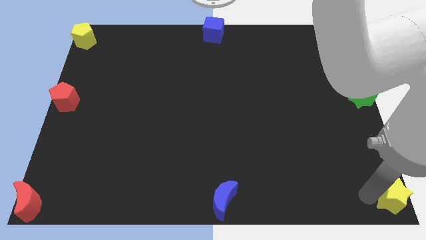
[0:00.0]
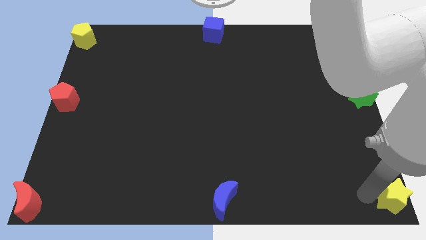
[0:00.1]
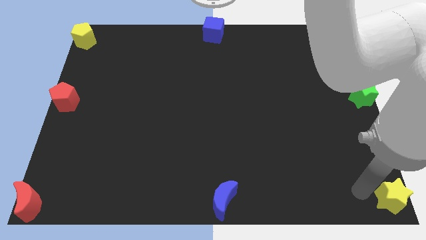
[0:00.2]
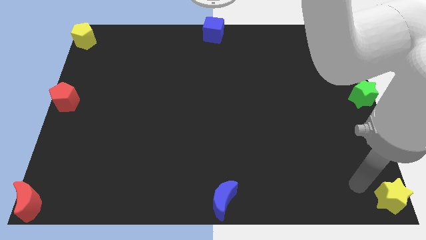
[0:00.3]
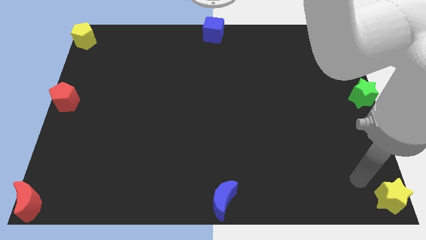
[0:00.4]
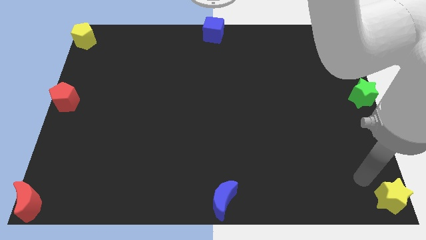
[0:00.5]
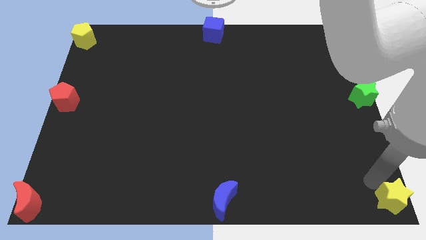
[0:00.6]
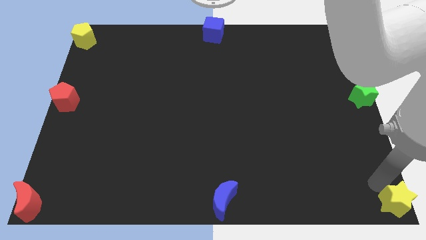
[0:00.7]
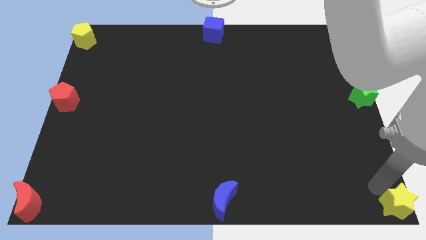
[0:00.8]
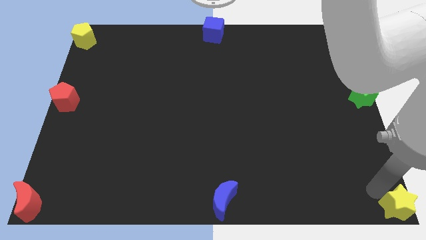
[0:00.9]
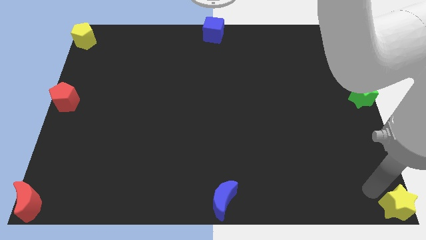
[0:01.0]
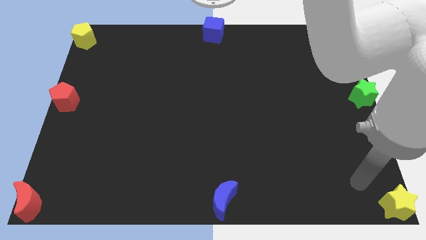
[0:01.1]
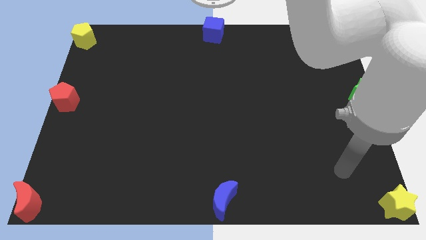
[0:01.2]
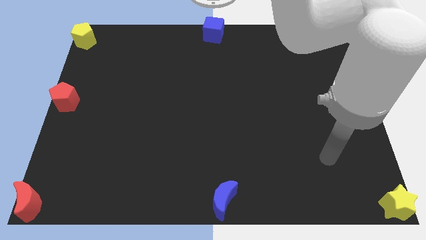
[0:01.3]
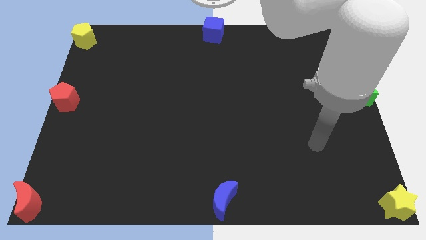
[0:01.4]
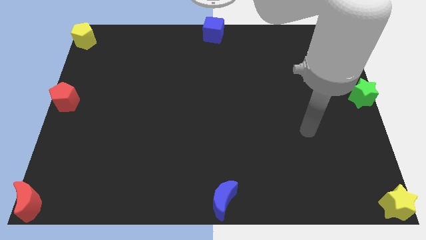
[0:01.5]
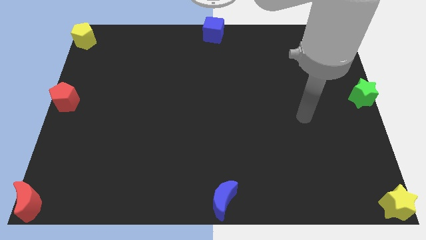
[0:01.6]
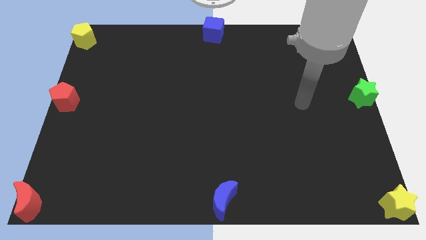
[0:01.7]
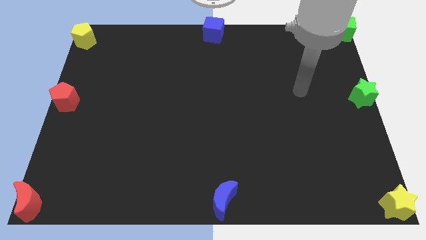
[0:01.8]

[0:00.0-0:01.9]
place yellow star to the eight bottom end

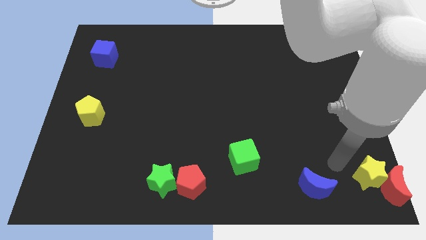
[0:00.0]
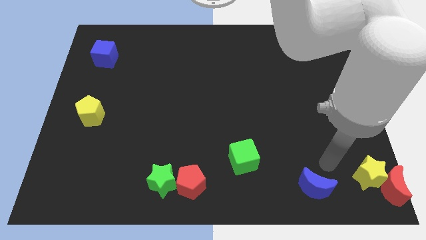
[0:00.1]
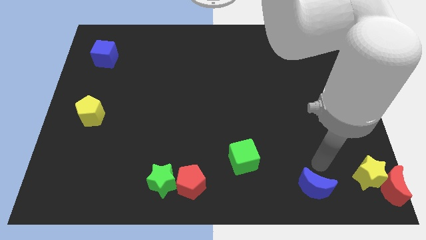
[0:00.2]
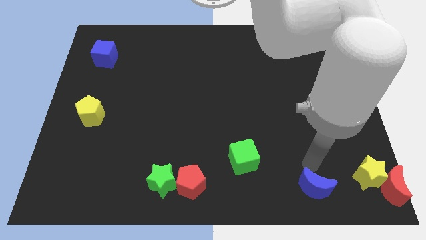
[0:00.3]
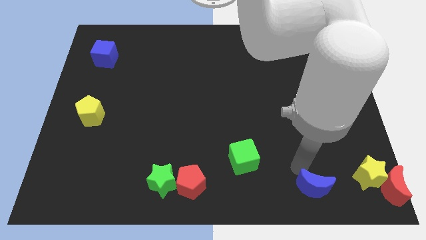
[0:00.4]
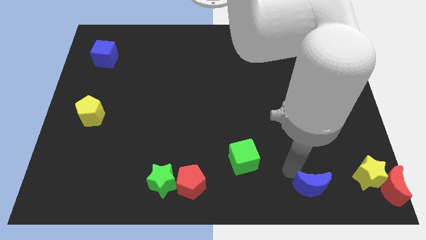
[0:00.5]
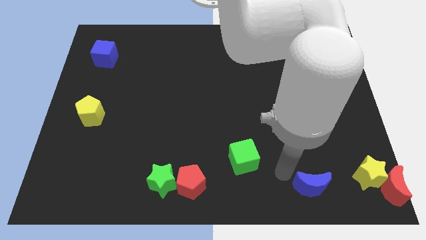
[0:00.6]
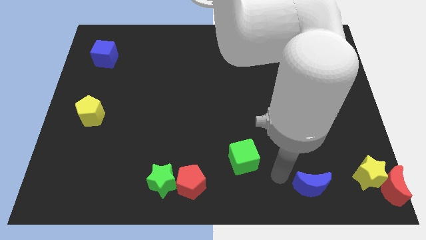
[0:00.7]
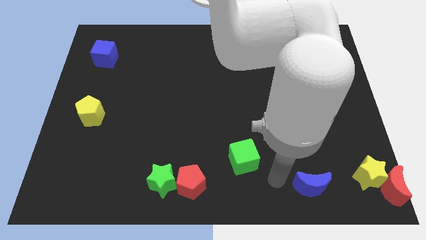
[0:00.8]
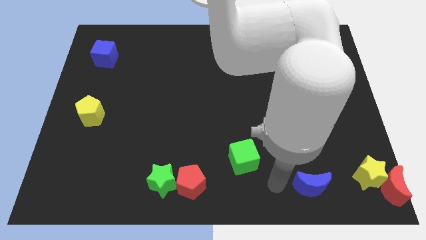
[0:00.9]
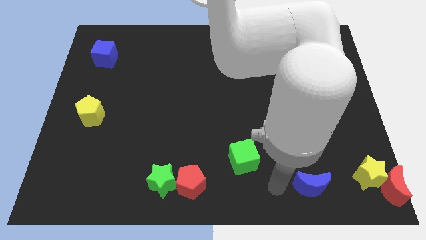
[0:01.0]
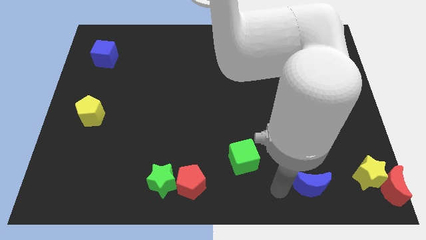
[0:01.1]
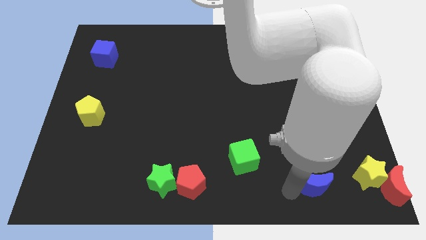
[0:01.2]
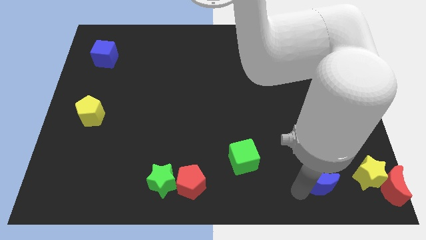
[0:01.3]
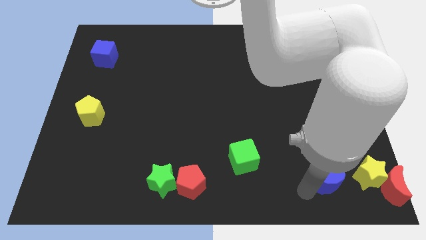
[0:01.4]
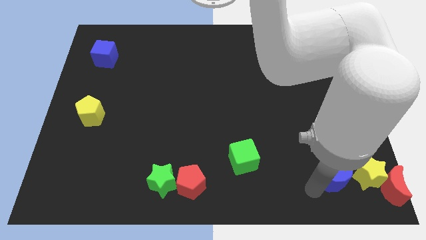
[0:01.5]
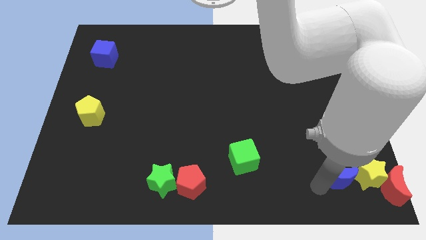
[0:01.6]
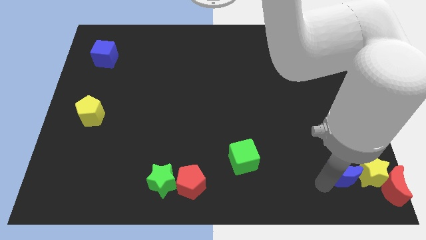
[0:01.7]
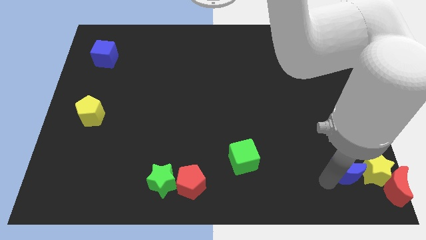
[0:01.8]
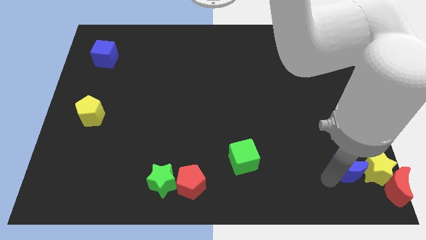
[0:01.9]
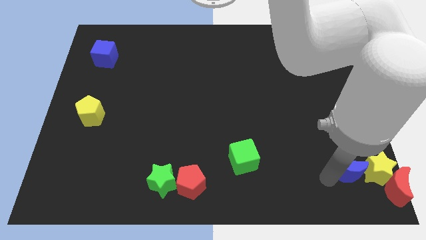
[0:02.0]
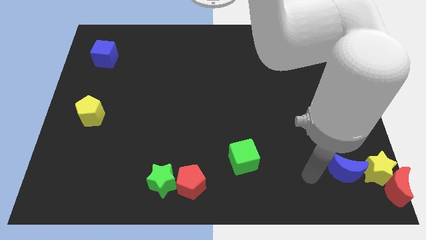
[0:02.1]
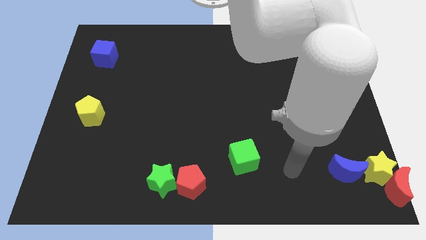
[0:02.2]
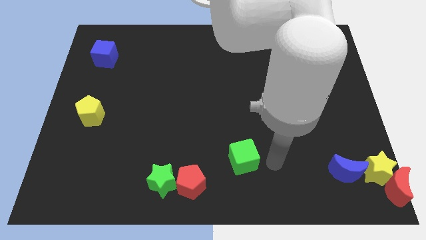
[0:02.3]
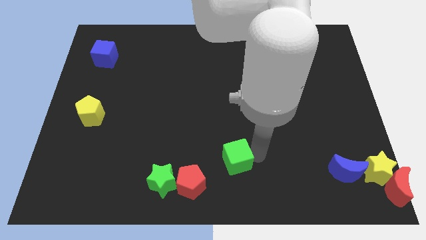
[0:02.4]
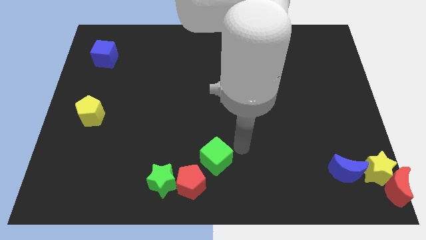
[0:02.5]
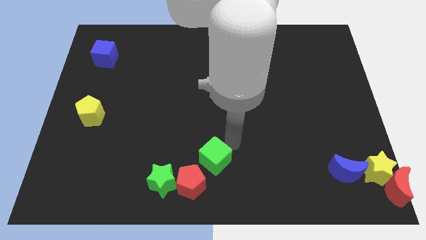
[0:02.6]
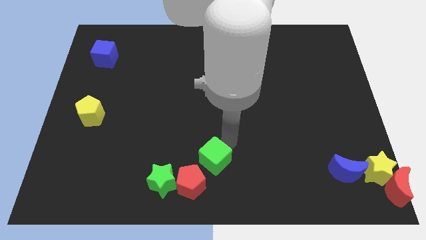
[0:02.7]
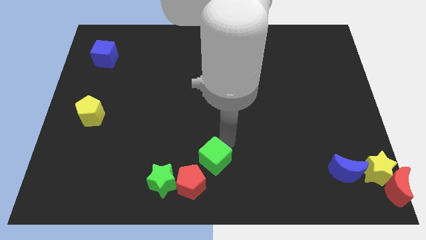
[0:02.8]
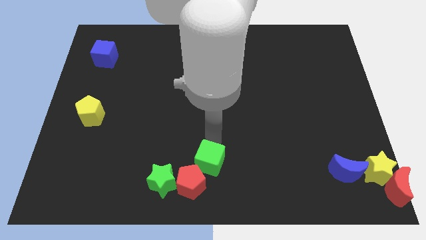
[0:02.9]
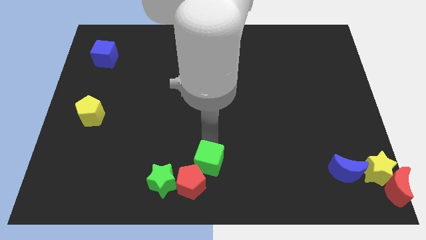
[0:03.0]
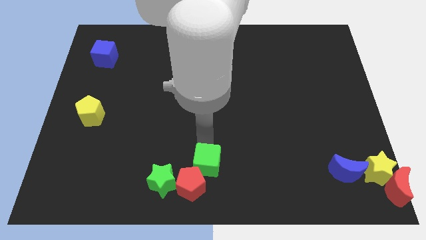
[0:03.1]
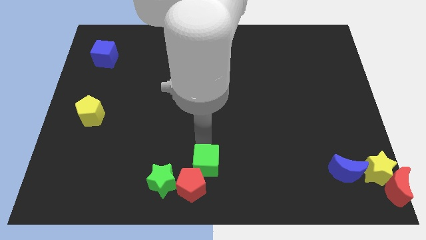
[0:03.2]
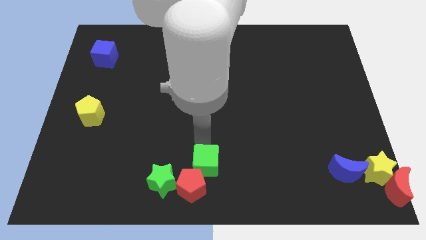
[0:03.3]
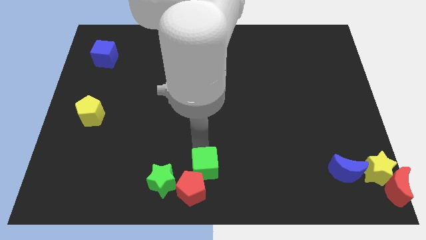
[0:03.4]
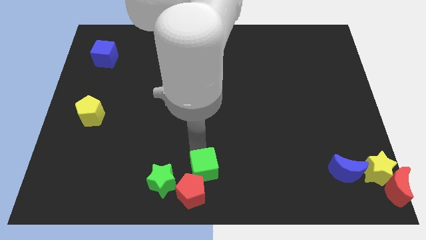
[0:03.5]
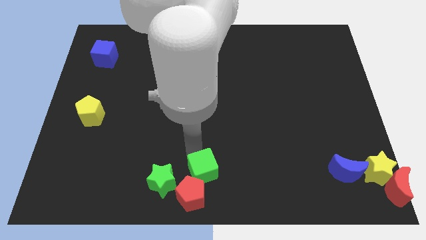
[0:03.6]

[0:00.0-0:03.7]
place blue moon to the left of yellow star

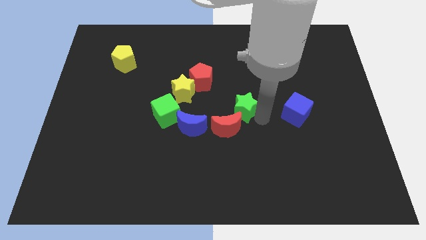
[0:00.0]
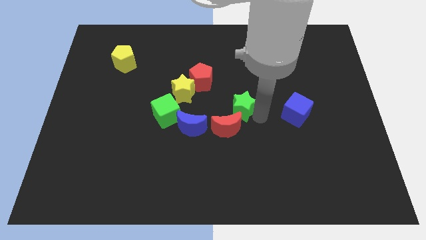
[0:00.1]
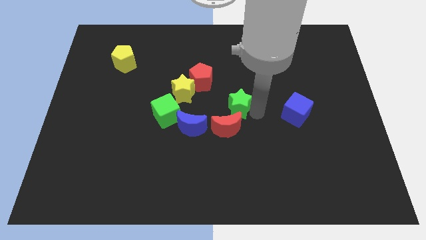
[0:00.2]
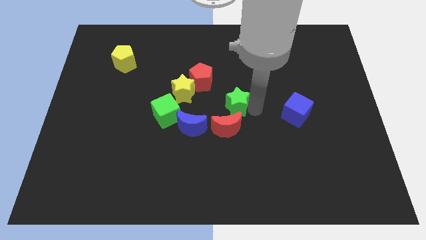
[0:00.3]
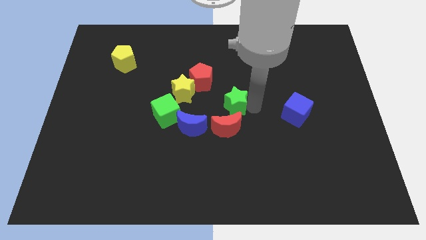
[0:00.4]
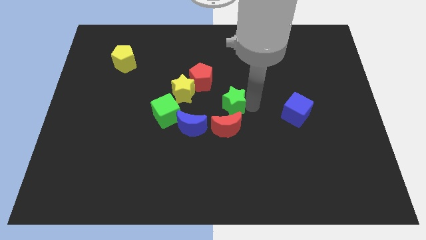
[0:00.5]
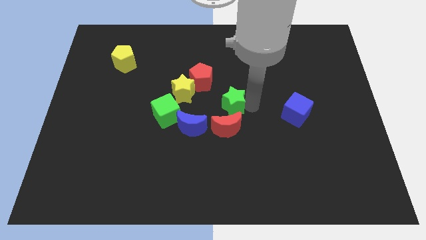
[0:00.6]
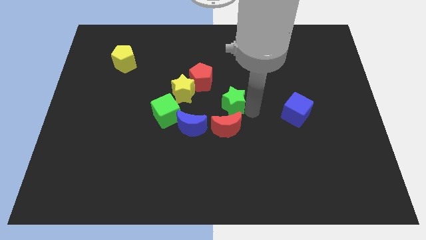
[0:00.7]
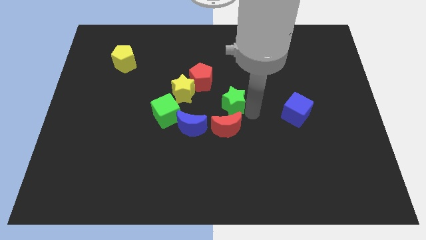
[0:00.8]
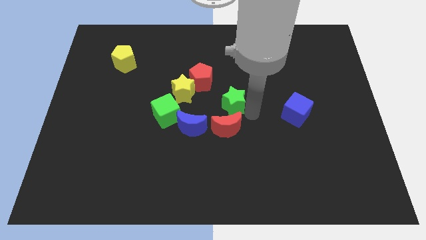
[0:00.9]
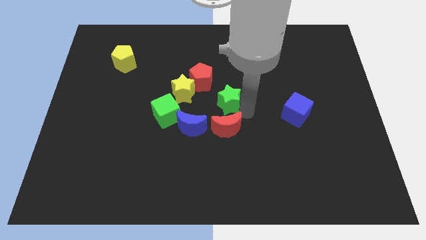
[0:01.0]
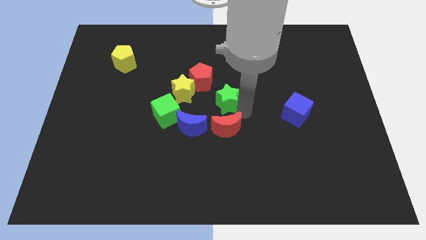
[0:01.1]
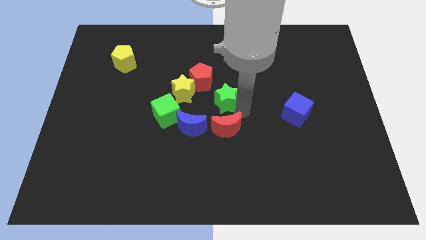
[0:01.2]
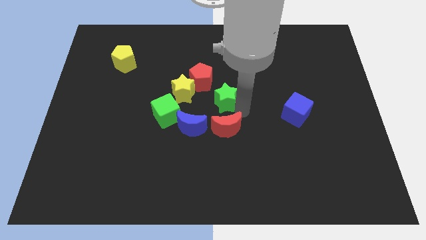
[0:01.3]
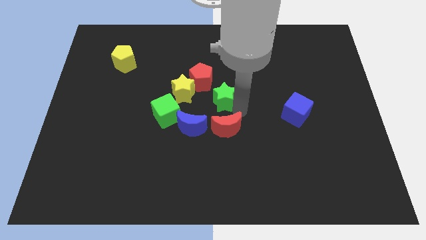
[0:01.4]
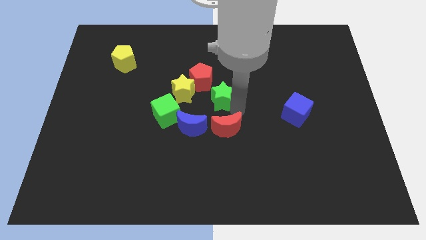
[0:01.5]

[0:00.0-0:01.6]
push green star above red crescent

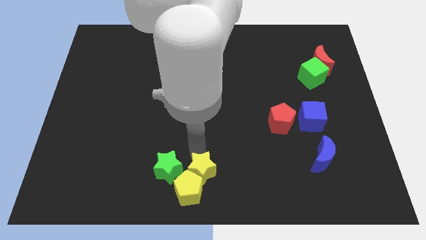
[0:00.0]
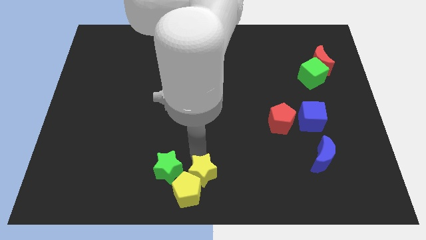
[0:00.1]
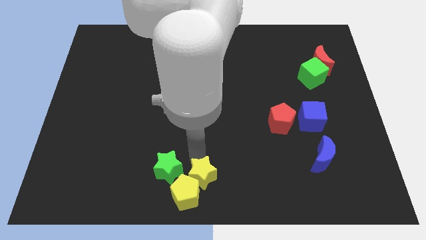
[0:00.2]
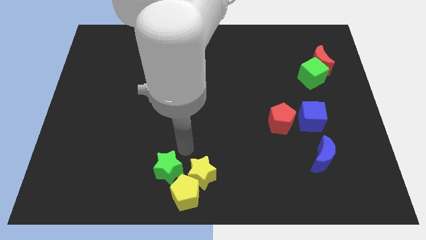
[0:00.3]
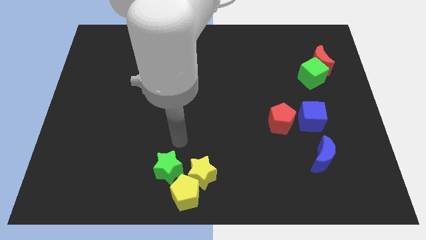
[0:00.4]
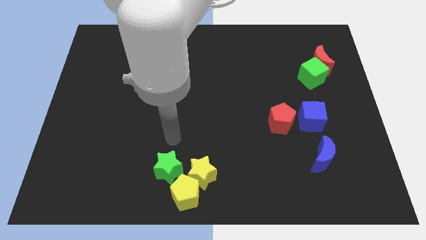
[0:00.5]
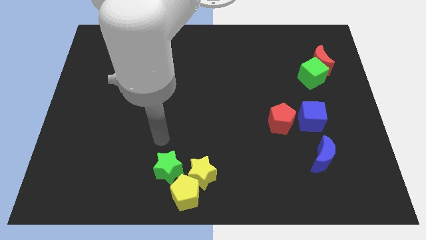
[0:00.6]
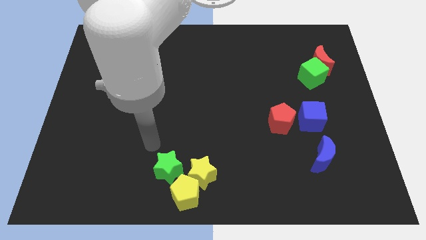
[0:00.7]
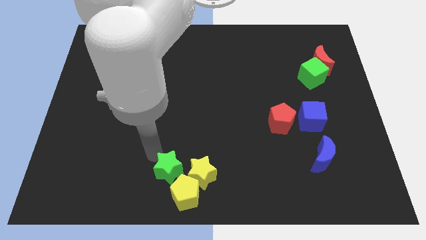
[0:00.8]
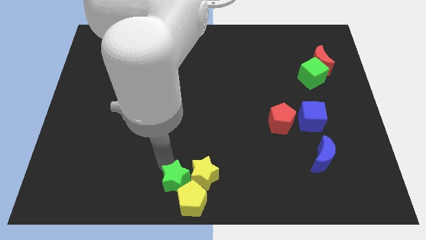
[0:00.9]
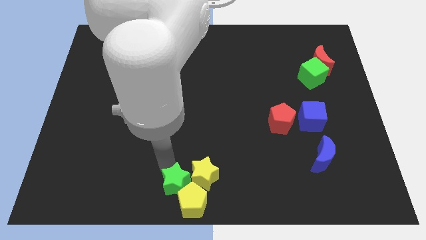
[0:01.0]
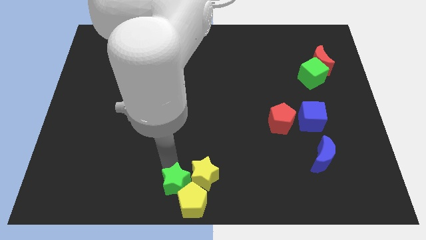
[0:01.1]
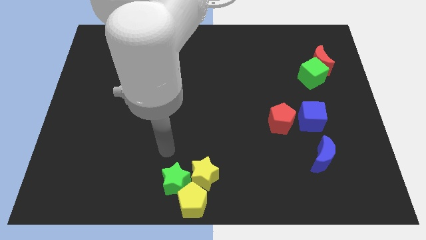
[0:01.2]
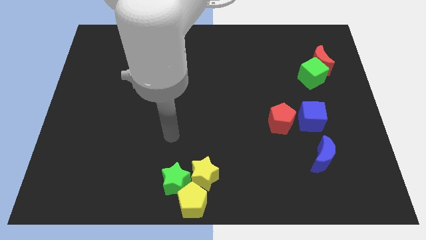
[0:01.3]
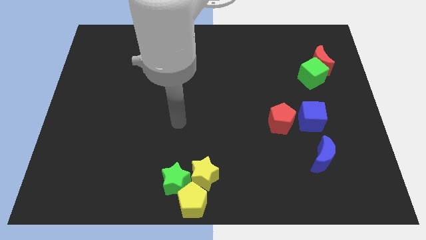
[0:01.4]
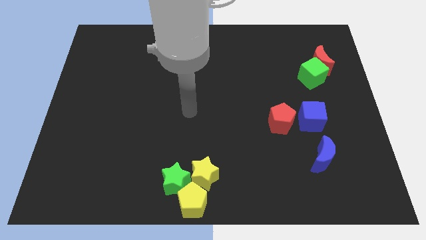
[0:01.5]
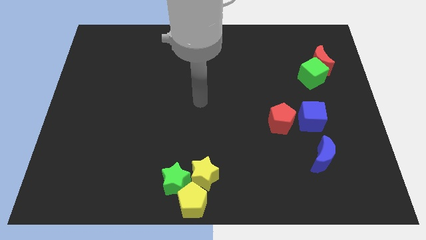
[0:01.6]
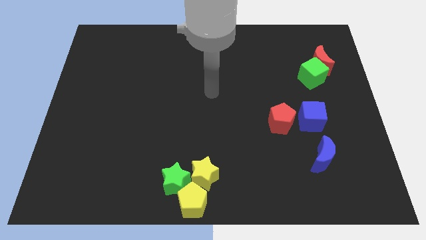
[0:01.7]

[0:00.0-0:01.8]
push green star down

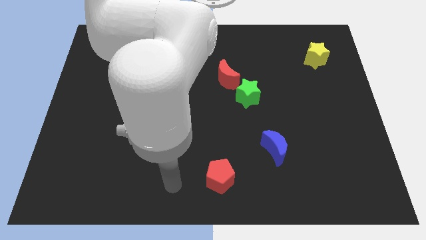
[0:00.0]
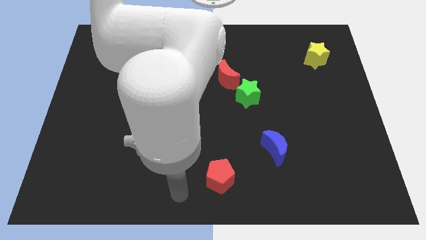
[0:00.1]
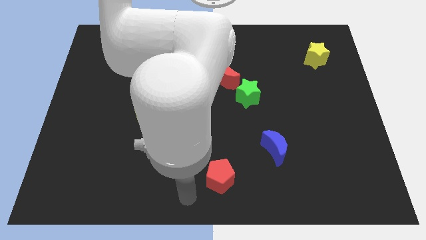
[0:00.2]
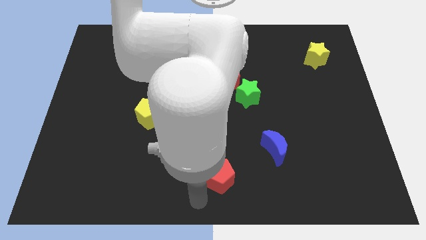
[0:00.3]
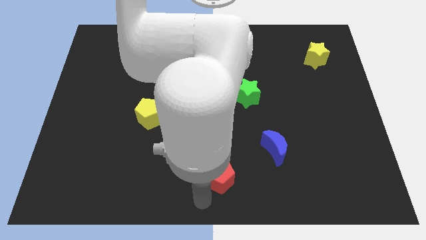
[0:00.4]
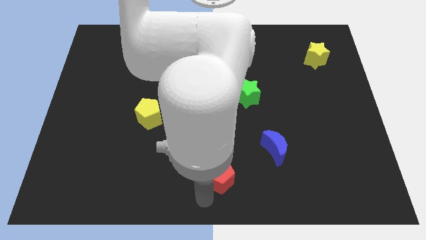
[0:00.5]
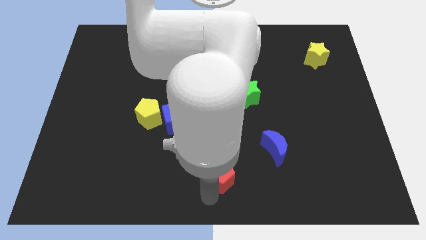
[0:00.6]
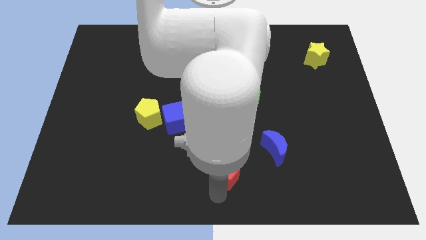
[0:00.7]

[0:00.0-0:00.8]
touch the bottom of red pentagon
